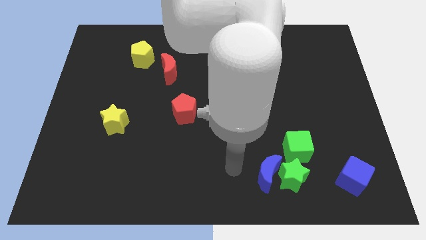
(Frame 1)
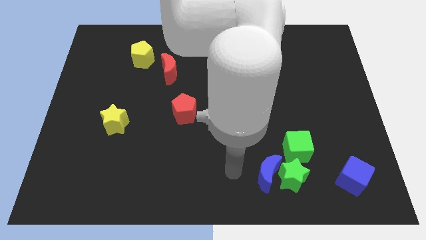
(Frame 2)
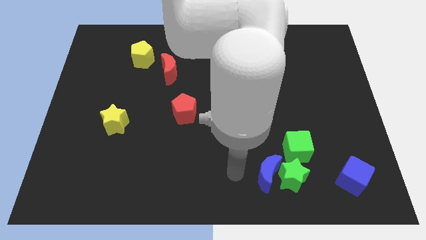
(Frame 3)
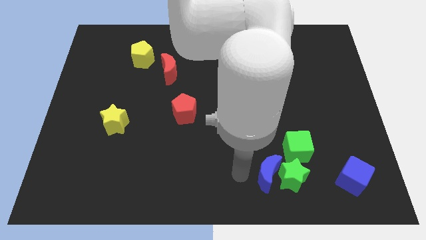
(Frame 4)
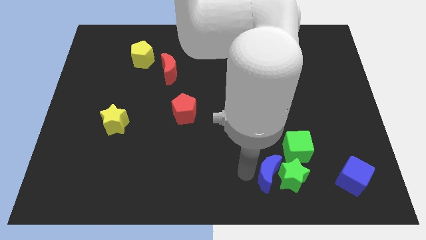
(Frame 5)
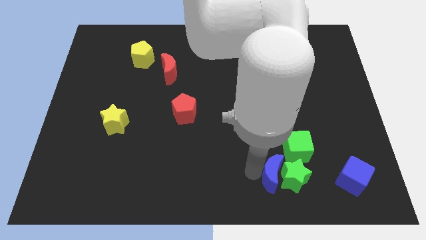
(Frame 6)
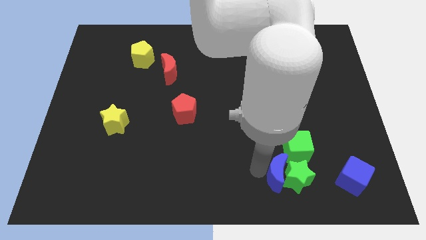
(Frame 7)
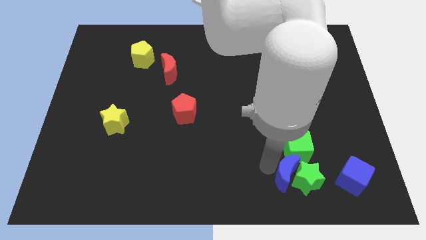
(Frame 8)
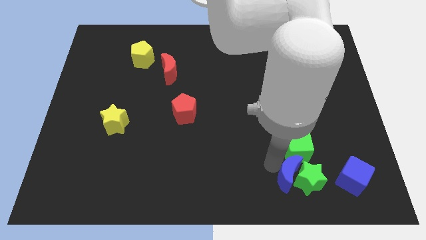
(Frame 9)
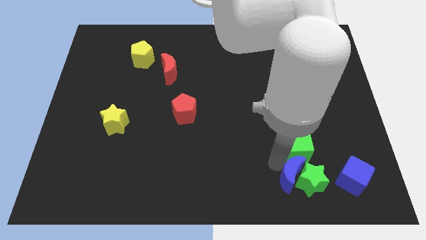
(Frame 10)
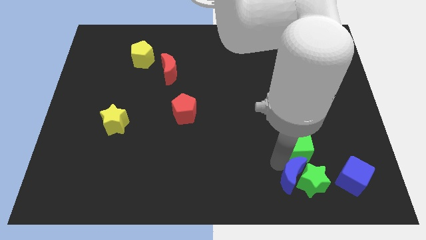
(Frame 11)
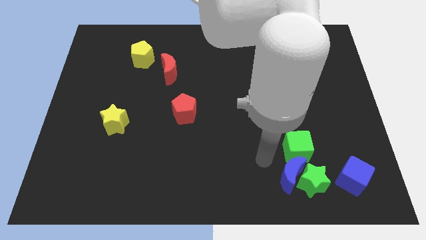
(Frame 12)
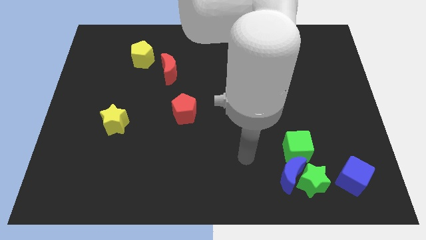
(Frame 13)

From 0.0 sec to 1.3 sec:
move the blue crescent along with the green star towards the blue cube

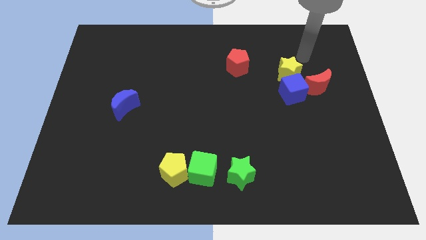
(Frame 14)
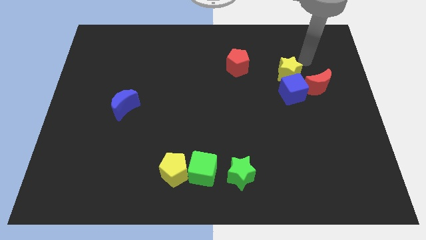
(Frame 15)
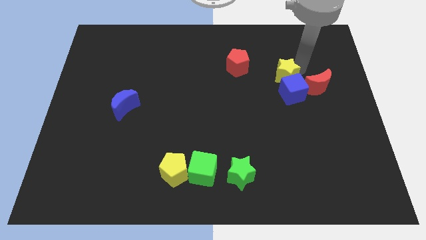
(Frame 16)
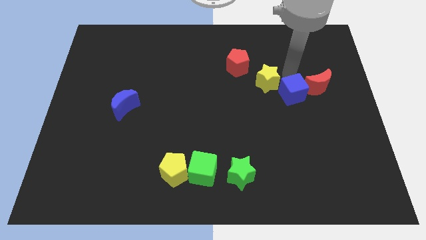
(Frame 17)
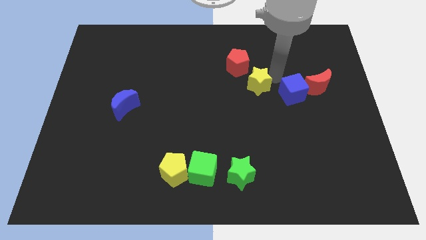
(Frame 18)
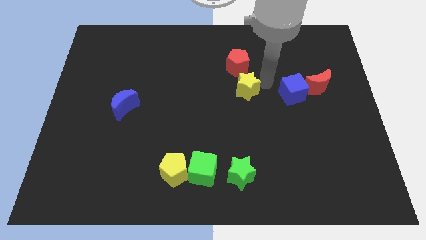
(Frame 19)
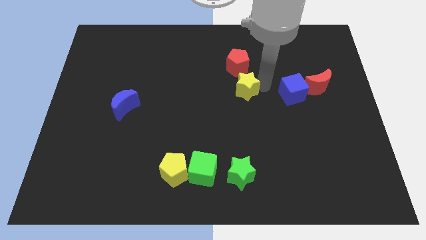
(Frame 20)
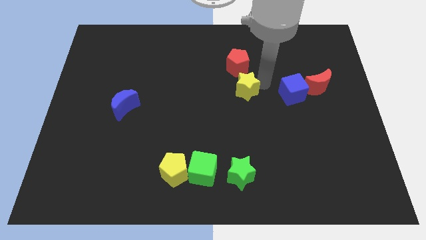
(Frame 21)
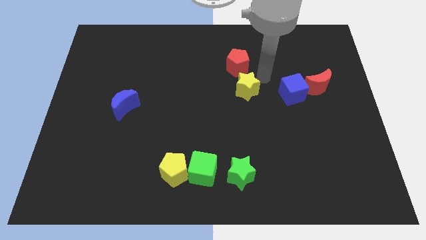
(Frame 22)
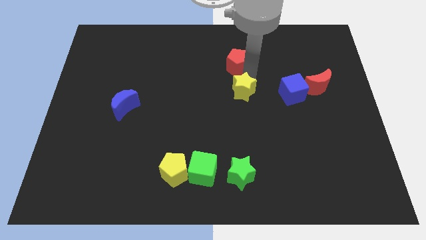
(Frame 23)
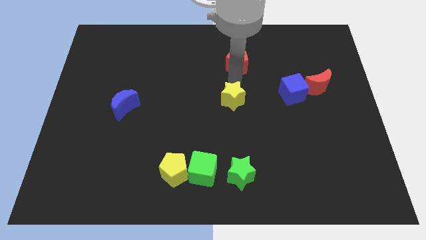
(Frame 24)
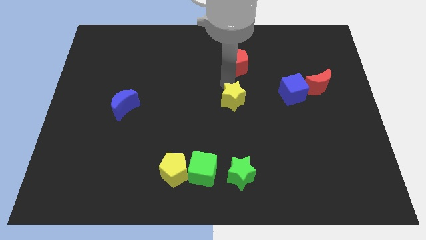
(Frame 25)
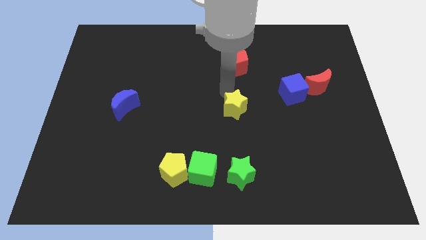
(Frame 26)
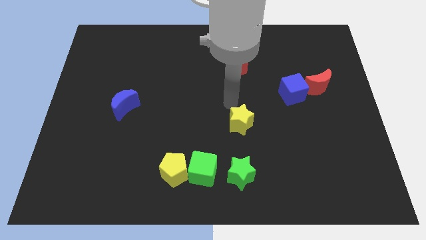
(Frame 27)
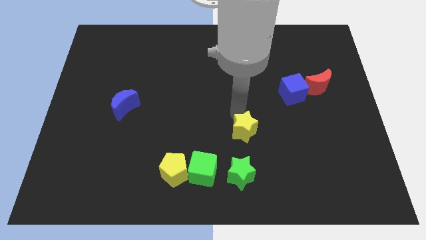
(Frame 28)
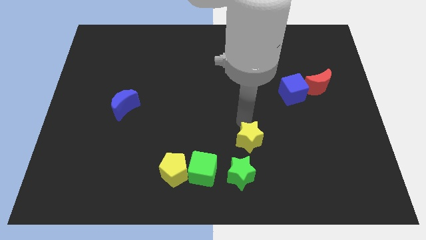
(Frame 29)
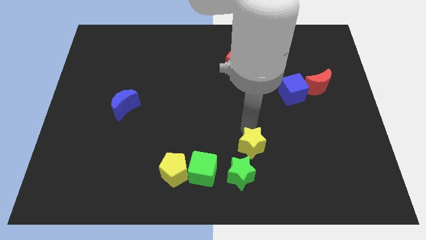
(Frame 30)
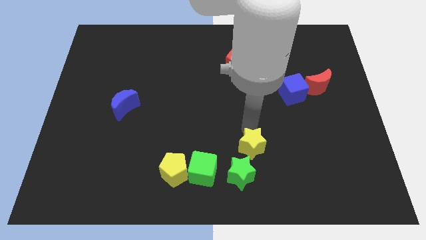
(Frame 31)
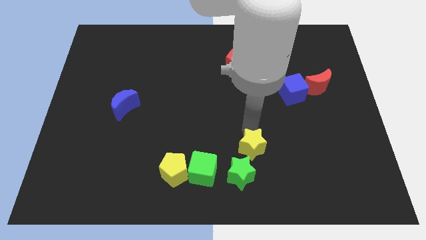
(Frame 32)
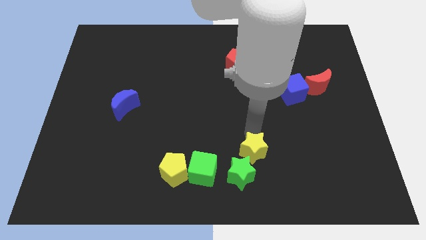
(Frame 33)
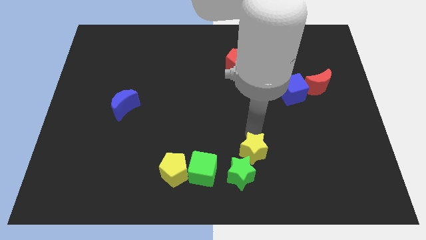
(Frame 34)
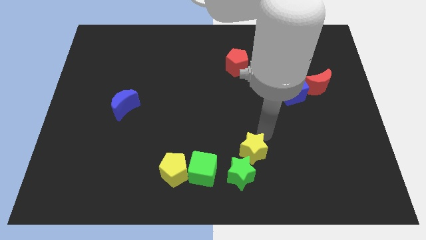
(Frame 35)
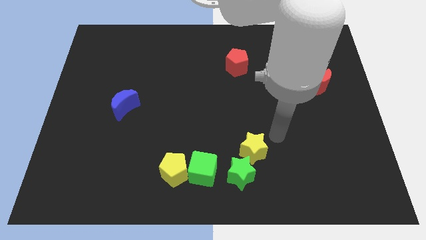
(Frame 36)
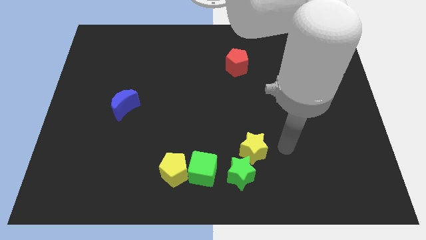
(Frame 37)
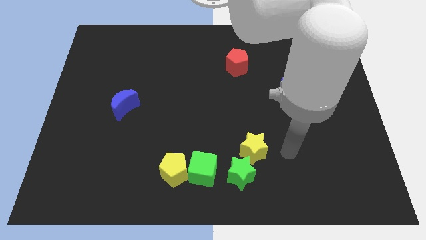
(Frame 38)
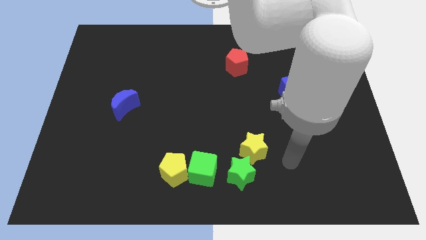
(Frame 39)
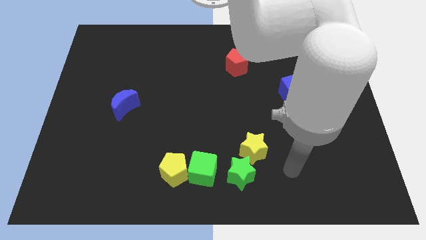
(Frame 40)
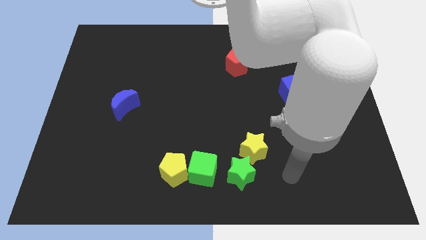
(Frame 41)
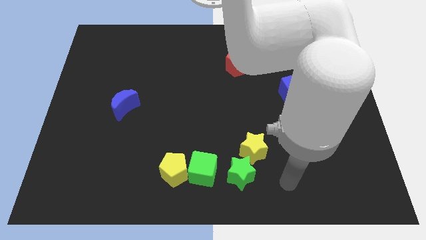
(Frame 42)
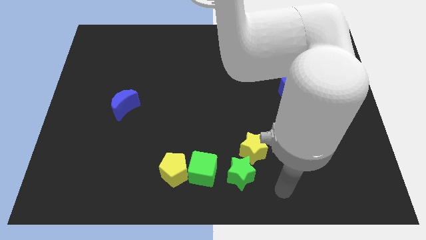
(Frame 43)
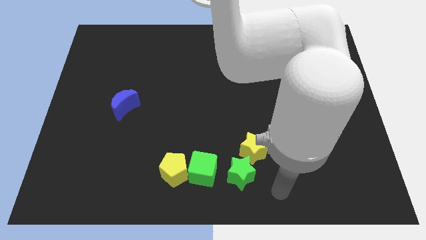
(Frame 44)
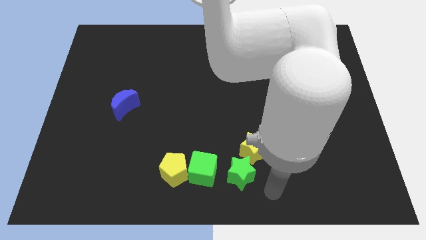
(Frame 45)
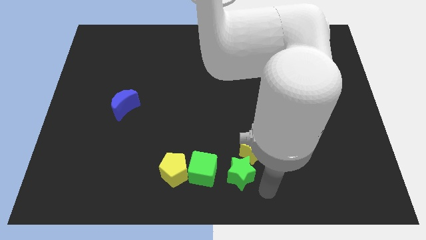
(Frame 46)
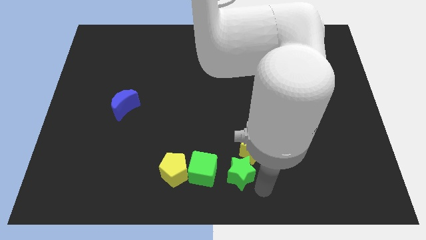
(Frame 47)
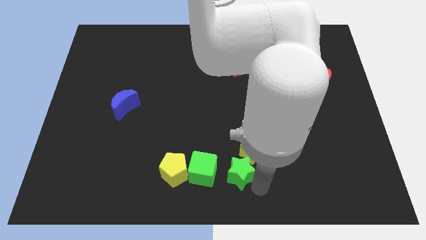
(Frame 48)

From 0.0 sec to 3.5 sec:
push the yellow star downward side

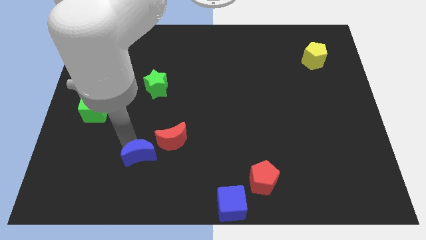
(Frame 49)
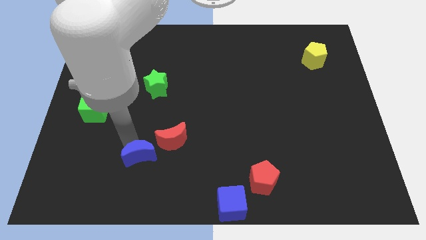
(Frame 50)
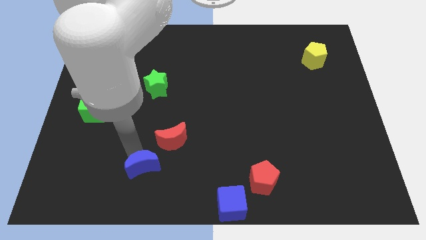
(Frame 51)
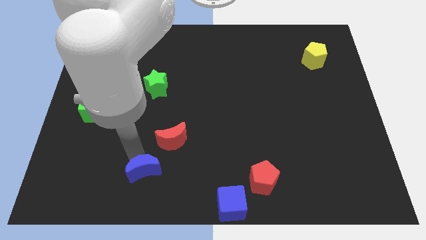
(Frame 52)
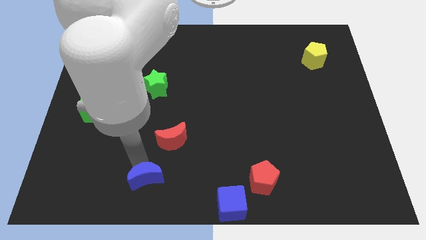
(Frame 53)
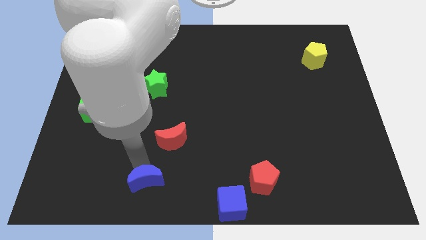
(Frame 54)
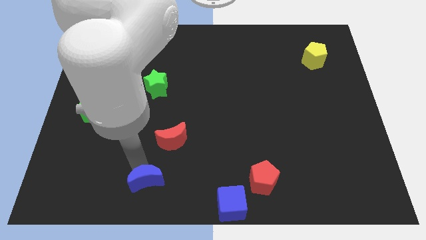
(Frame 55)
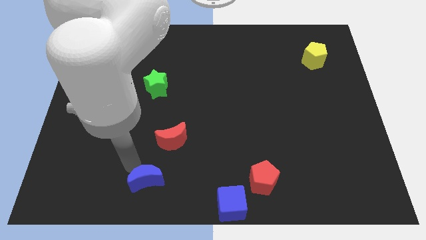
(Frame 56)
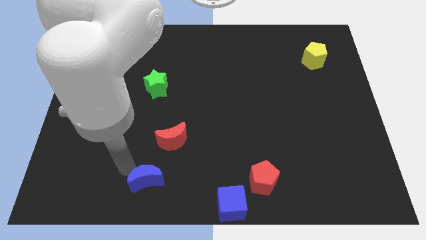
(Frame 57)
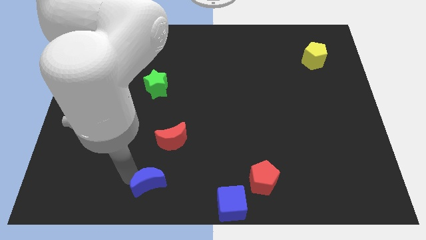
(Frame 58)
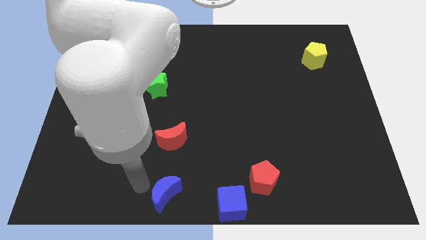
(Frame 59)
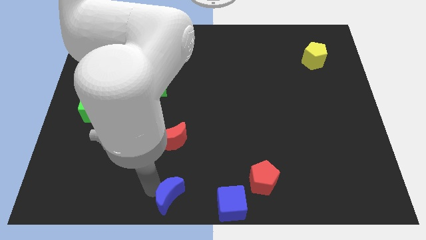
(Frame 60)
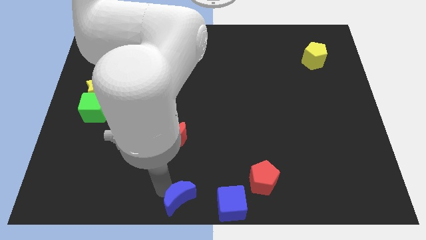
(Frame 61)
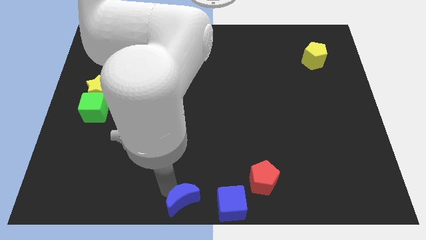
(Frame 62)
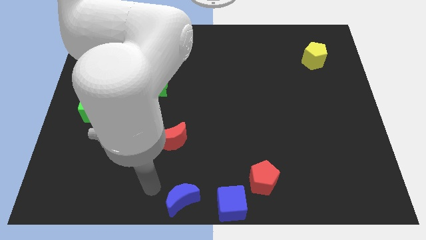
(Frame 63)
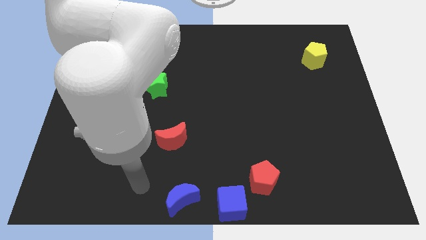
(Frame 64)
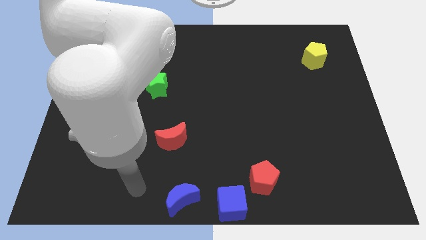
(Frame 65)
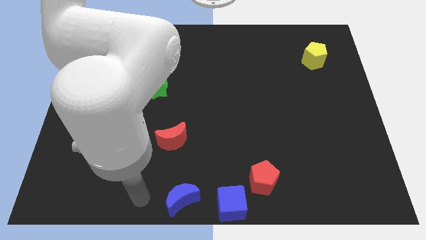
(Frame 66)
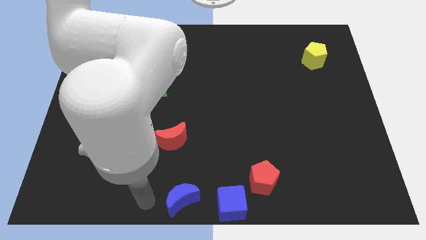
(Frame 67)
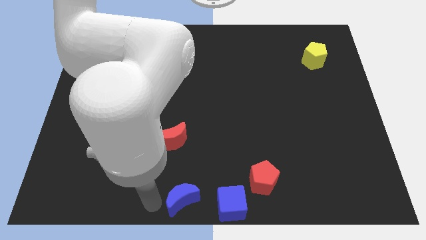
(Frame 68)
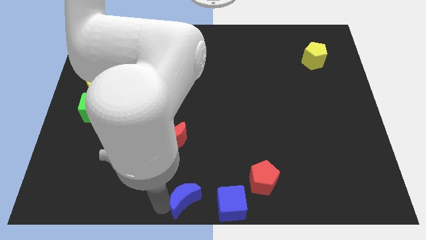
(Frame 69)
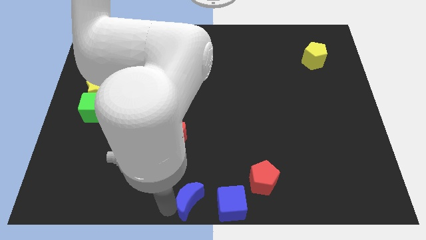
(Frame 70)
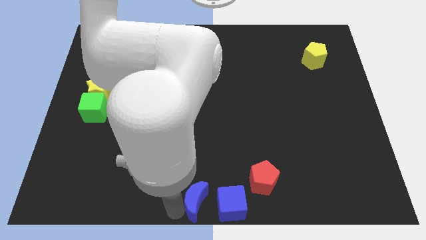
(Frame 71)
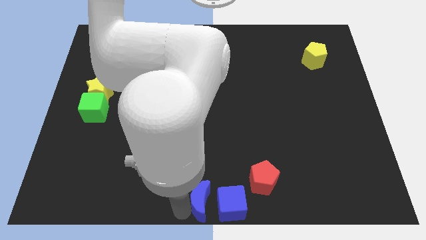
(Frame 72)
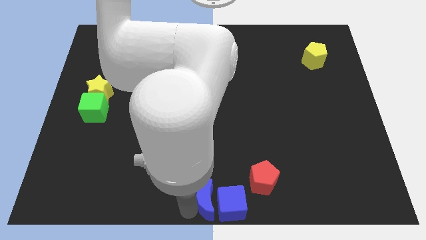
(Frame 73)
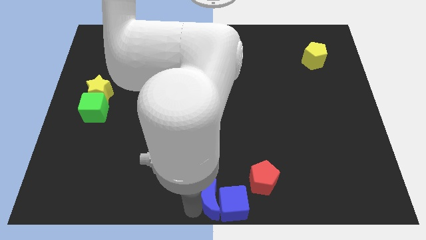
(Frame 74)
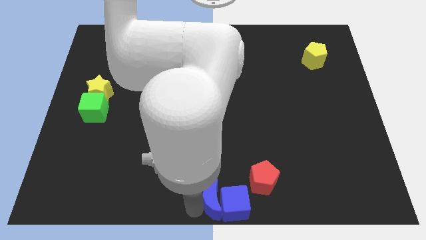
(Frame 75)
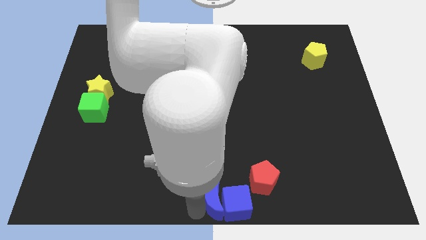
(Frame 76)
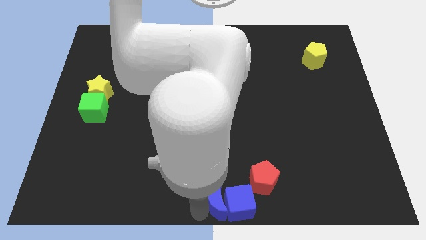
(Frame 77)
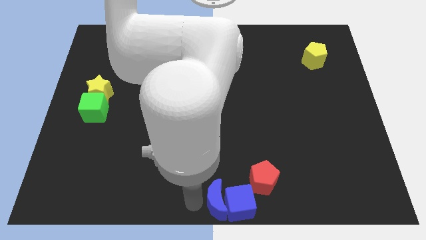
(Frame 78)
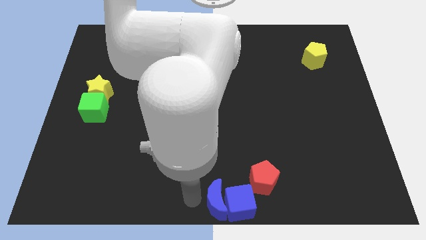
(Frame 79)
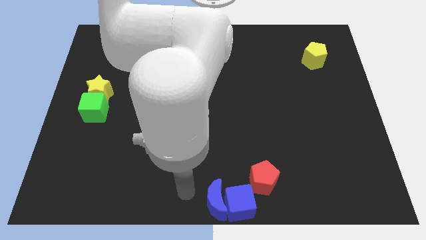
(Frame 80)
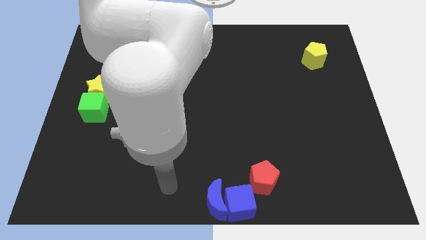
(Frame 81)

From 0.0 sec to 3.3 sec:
push the blue crescent into the blue cube

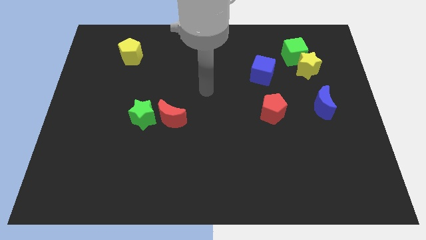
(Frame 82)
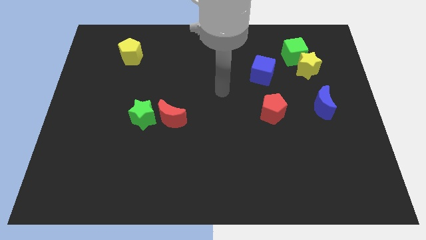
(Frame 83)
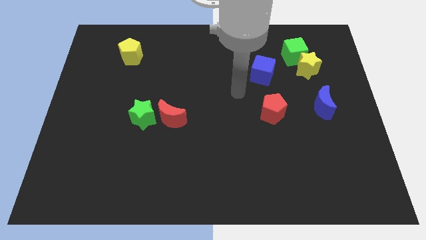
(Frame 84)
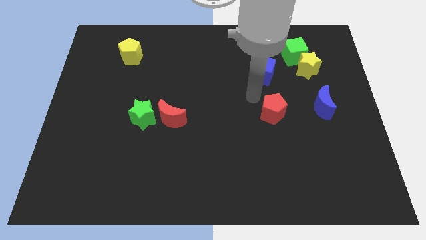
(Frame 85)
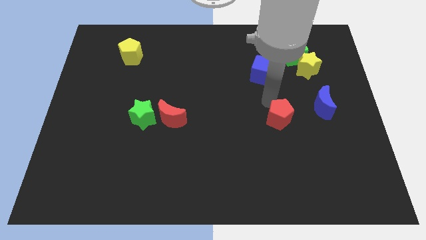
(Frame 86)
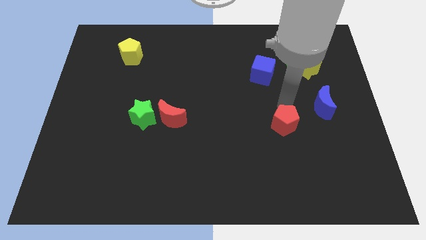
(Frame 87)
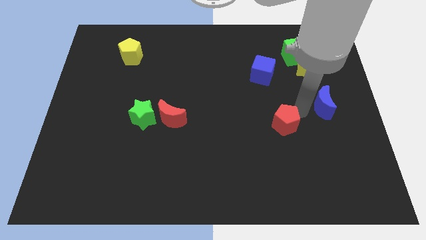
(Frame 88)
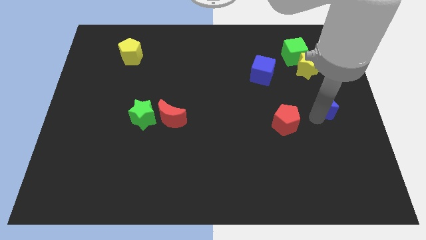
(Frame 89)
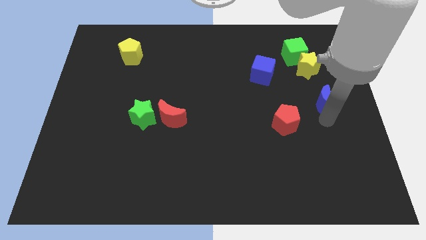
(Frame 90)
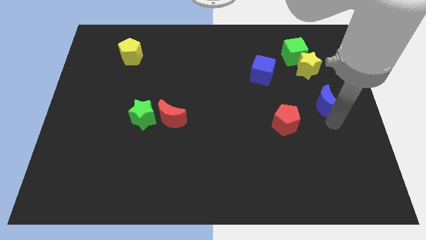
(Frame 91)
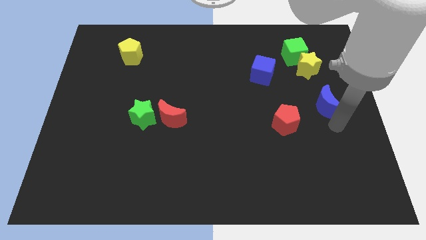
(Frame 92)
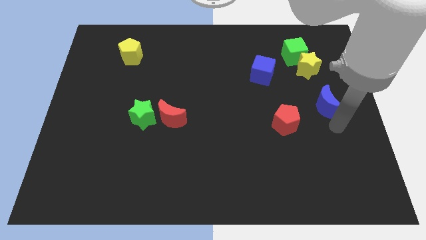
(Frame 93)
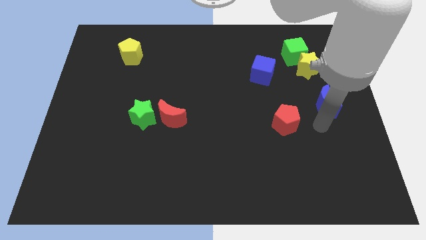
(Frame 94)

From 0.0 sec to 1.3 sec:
touch the red pentagon
